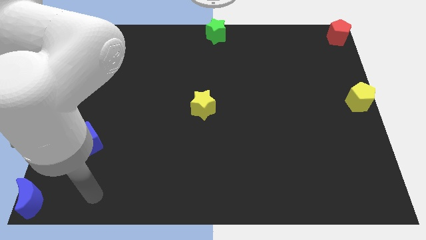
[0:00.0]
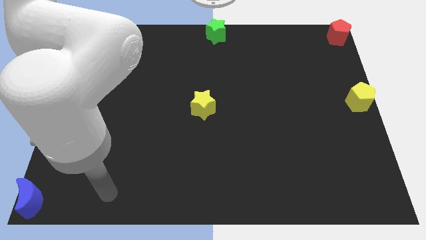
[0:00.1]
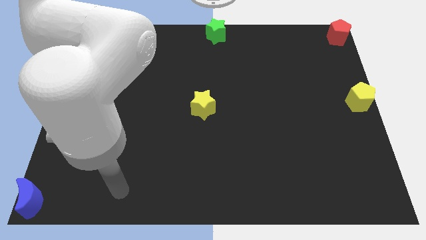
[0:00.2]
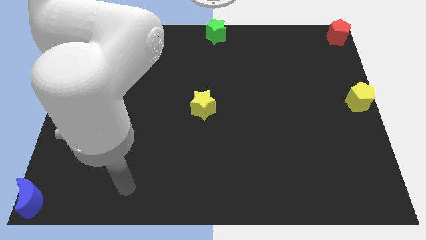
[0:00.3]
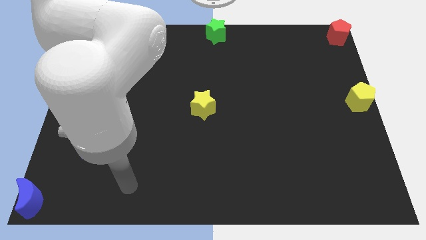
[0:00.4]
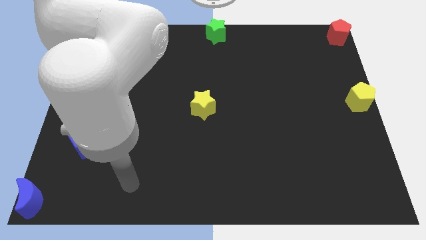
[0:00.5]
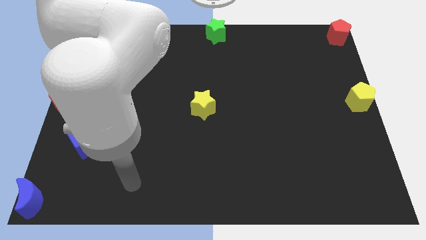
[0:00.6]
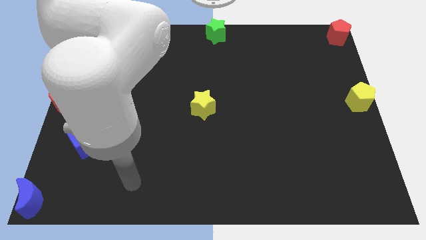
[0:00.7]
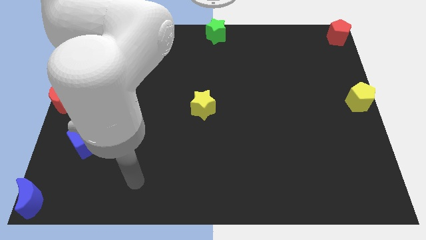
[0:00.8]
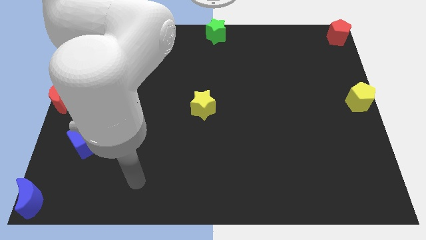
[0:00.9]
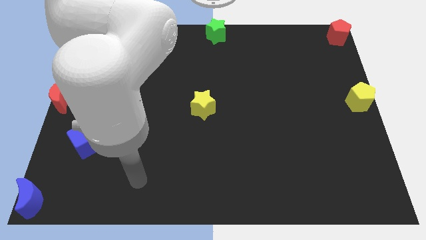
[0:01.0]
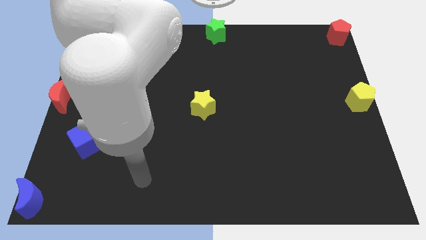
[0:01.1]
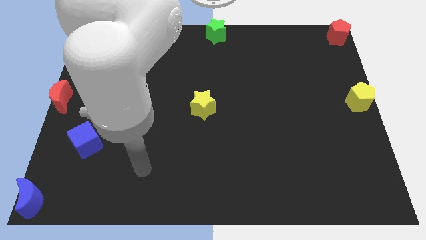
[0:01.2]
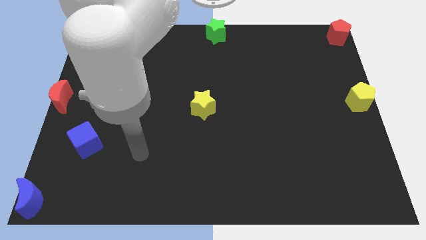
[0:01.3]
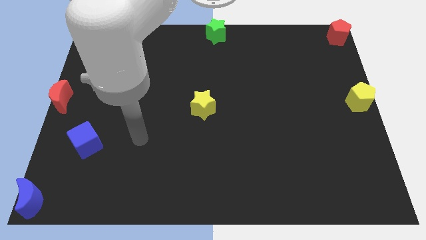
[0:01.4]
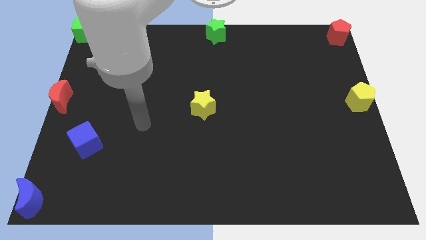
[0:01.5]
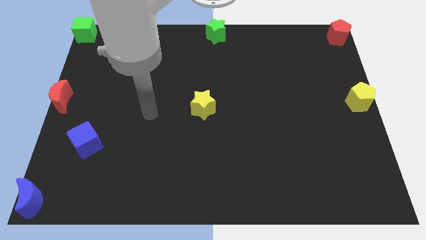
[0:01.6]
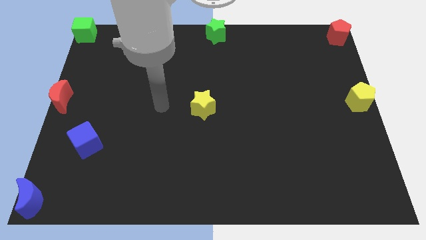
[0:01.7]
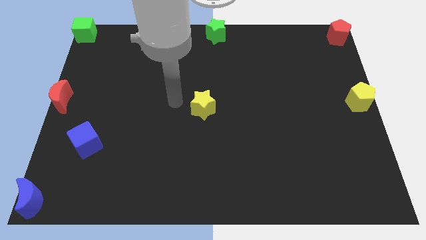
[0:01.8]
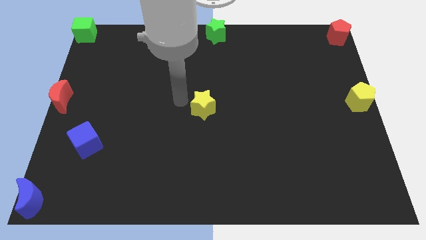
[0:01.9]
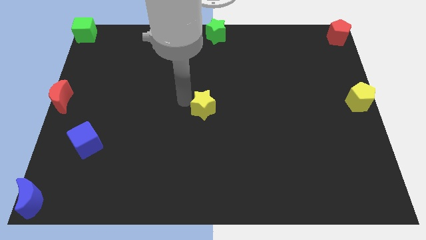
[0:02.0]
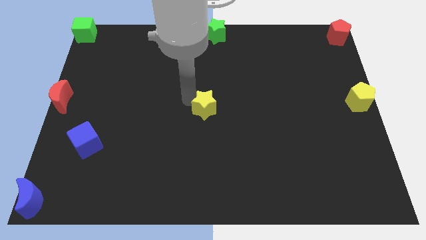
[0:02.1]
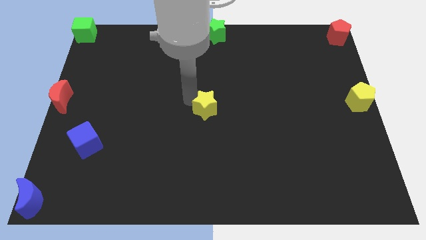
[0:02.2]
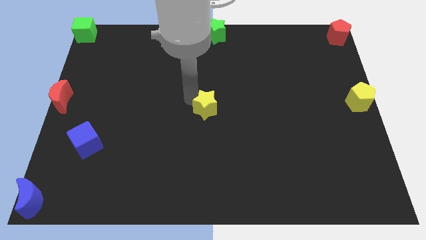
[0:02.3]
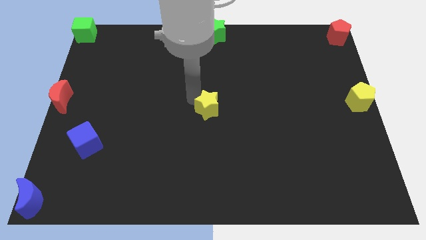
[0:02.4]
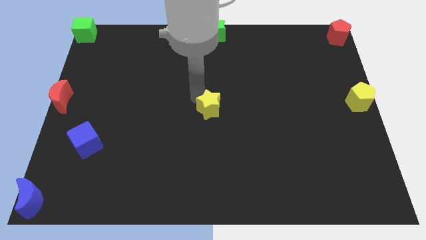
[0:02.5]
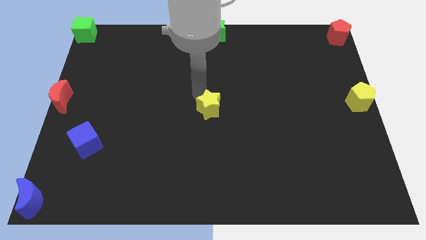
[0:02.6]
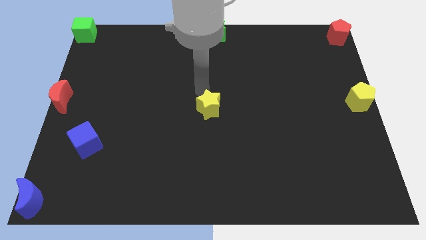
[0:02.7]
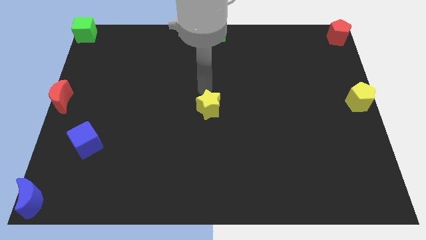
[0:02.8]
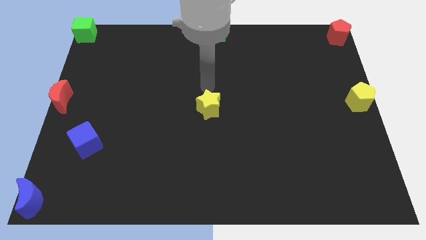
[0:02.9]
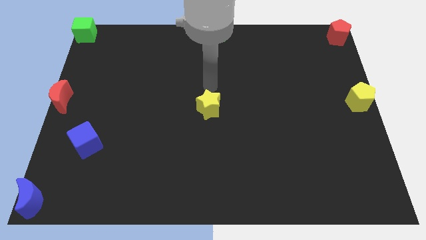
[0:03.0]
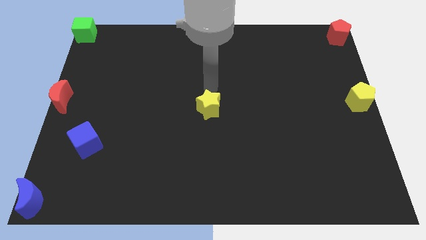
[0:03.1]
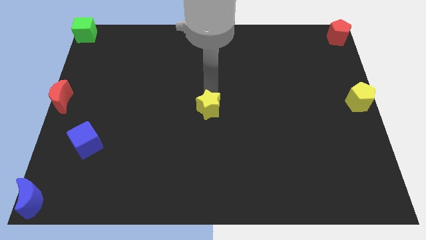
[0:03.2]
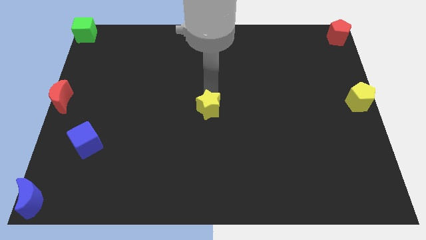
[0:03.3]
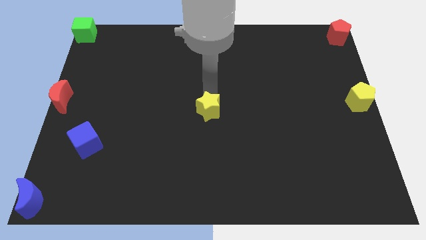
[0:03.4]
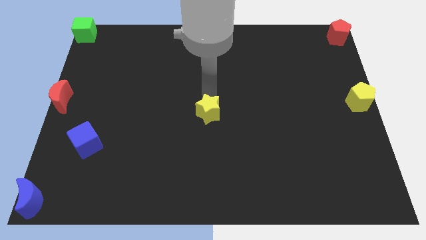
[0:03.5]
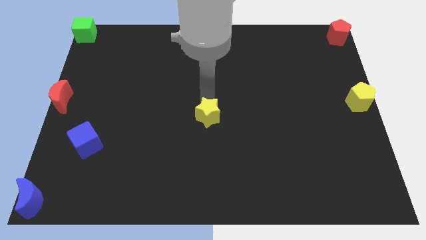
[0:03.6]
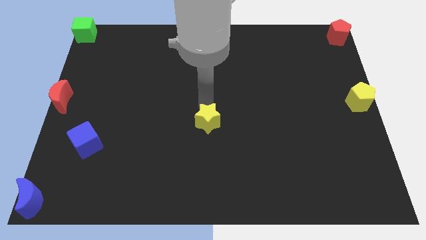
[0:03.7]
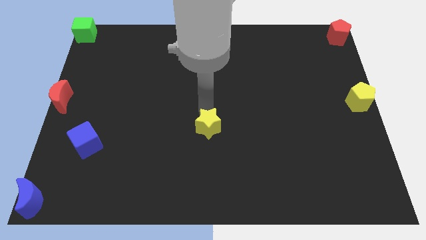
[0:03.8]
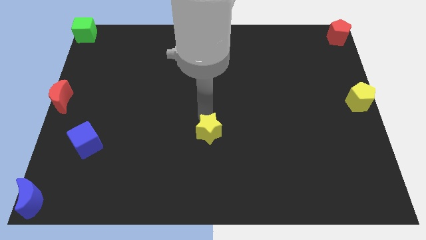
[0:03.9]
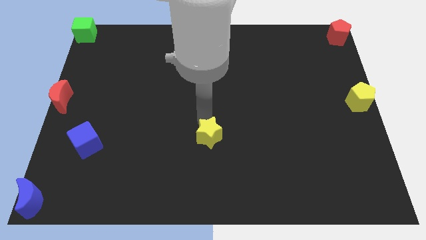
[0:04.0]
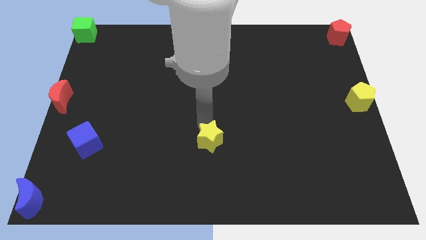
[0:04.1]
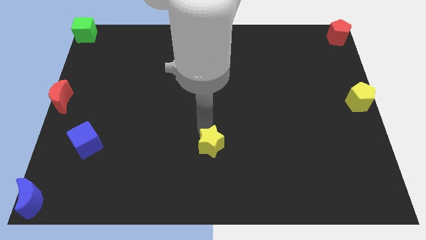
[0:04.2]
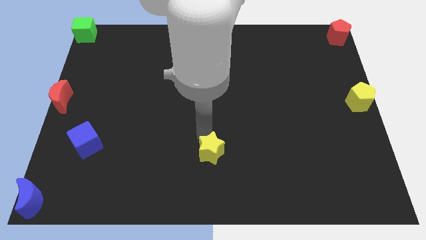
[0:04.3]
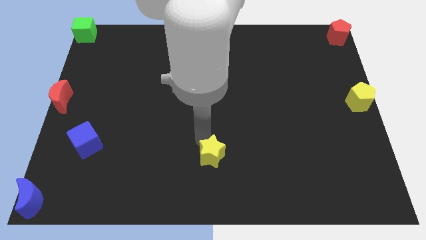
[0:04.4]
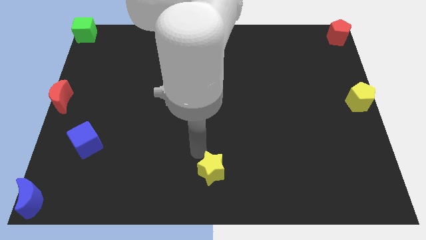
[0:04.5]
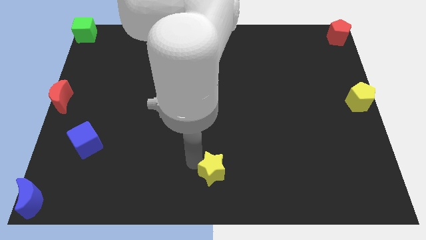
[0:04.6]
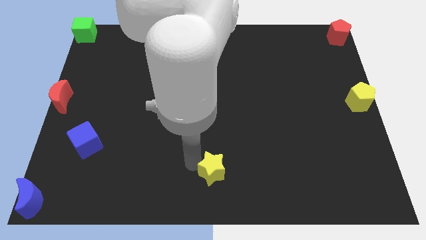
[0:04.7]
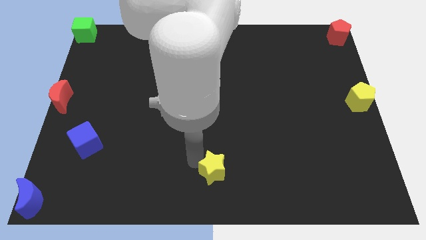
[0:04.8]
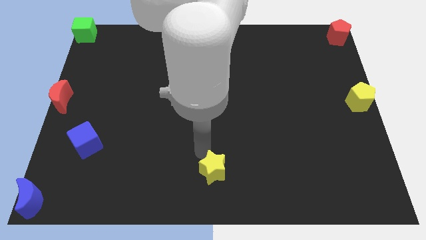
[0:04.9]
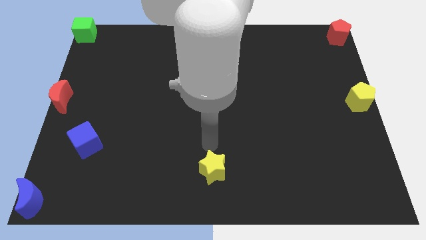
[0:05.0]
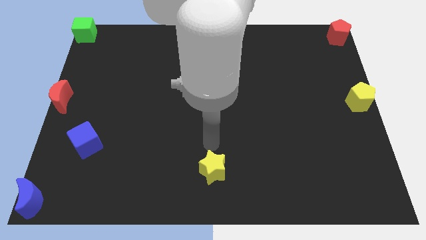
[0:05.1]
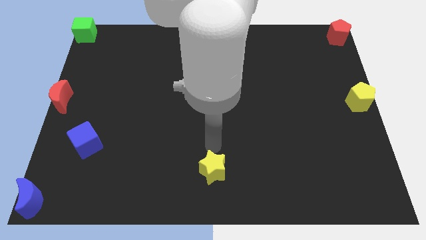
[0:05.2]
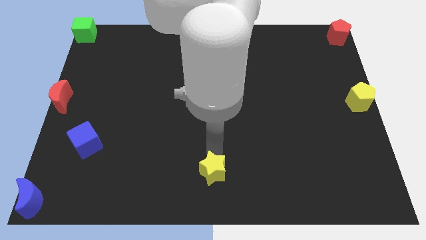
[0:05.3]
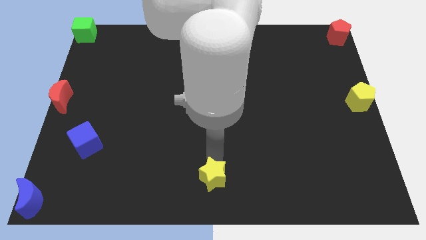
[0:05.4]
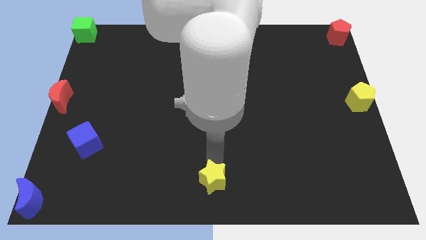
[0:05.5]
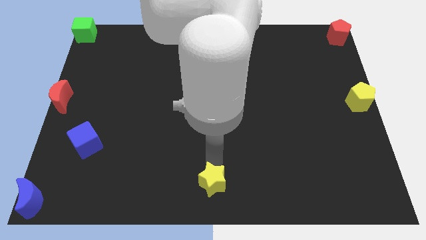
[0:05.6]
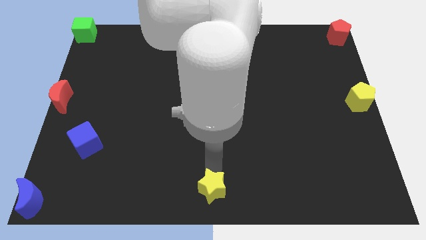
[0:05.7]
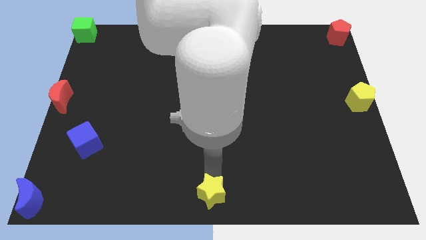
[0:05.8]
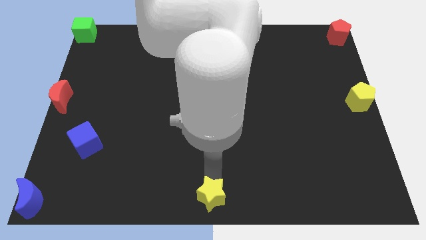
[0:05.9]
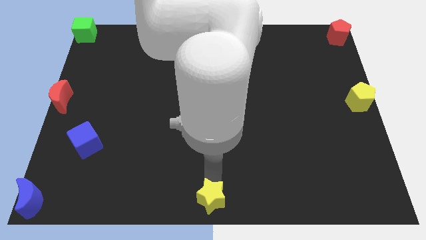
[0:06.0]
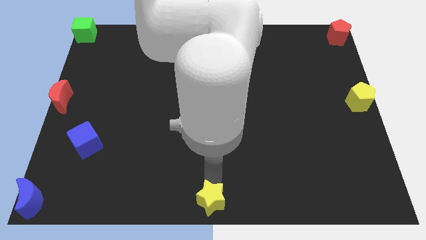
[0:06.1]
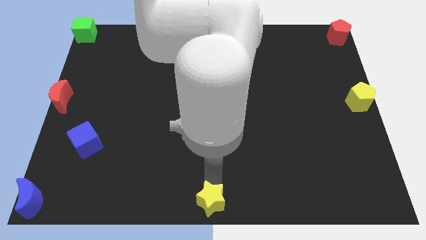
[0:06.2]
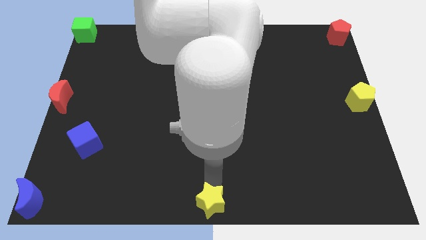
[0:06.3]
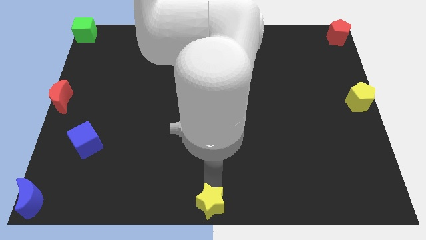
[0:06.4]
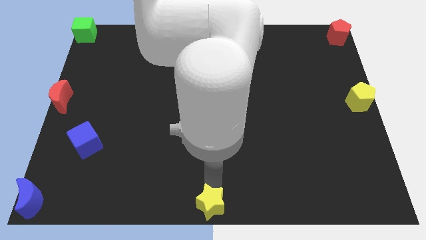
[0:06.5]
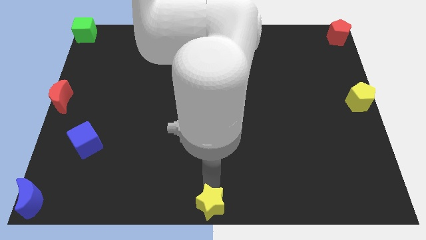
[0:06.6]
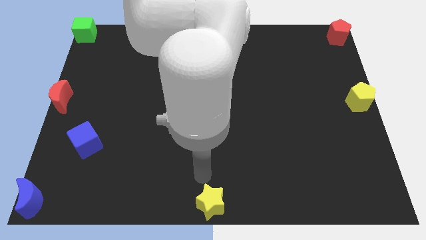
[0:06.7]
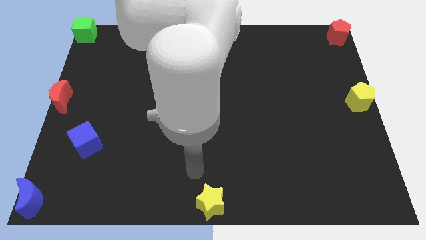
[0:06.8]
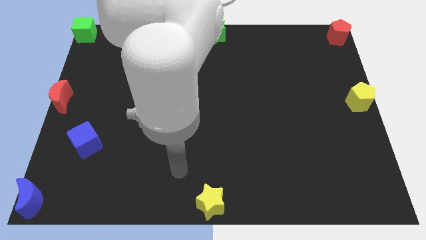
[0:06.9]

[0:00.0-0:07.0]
move yellow star to the bottom of the board to the middle

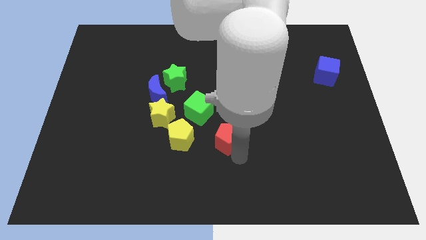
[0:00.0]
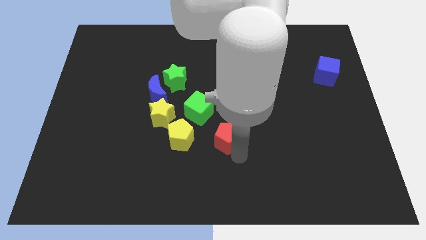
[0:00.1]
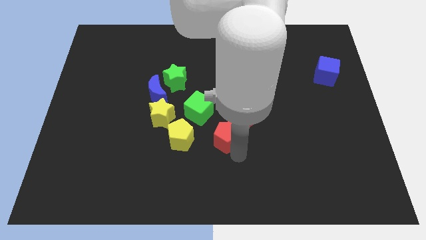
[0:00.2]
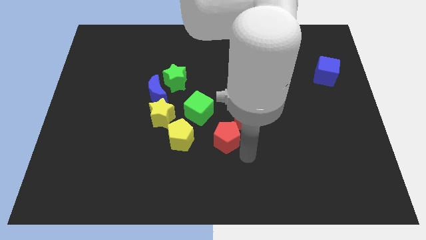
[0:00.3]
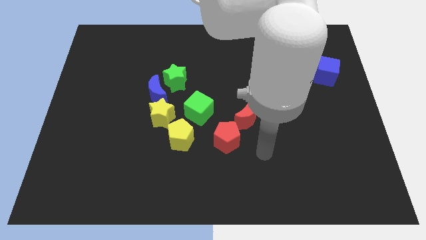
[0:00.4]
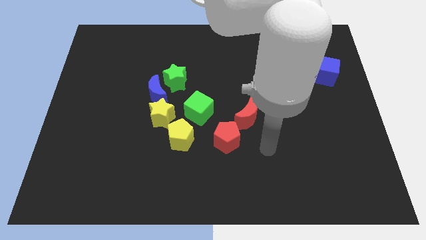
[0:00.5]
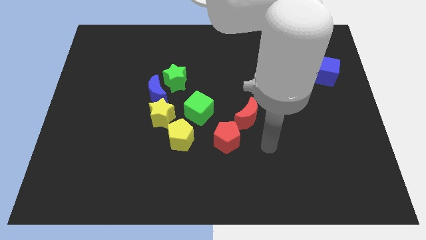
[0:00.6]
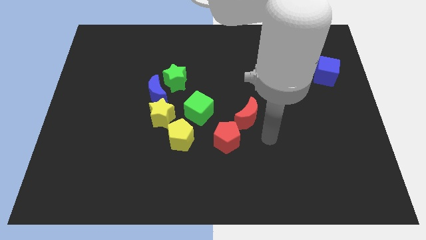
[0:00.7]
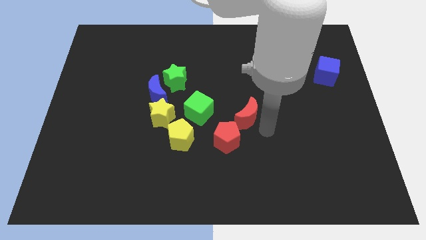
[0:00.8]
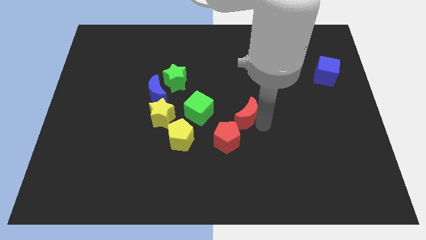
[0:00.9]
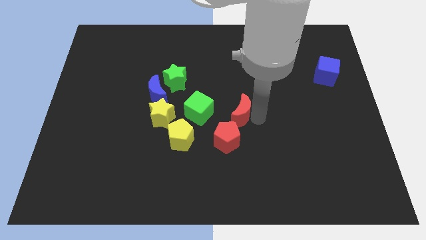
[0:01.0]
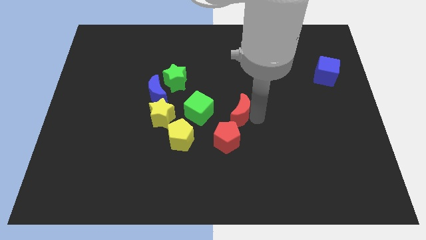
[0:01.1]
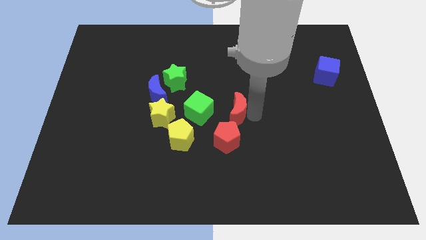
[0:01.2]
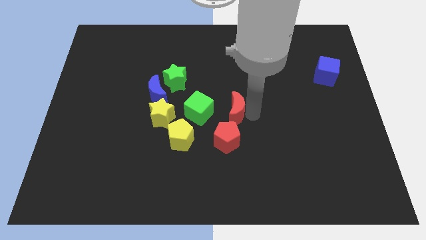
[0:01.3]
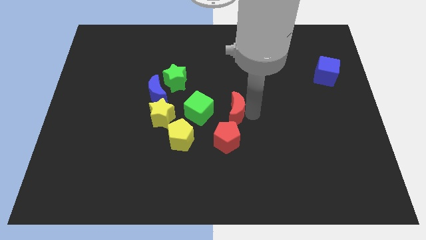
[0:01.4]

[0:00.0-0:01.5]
slightly push the red crescent towards the green cube

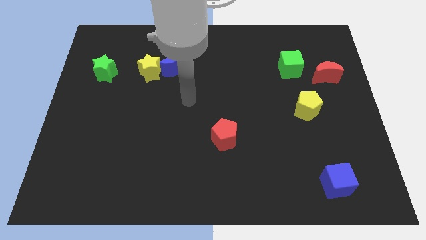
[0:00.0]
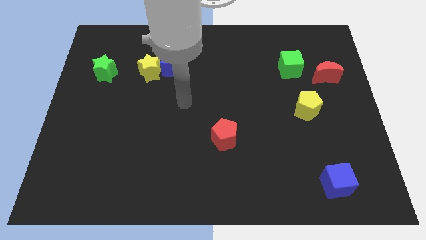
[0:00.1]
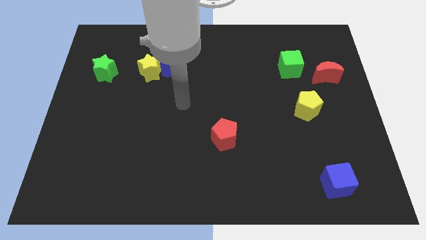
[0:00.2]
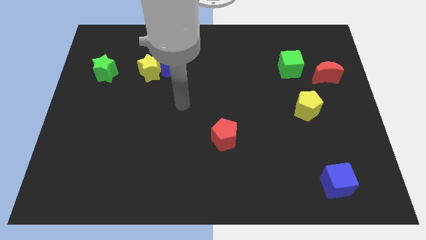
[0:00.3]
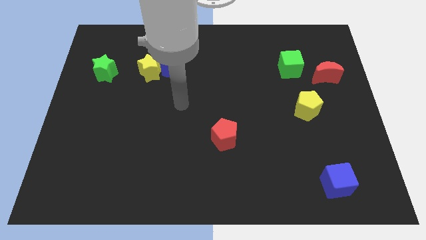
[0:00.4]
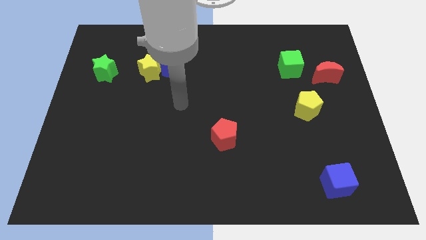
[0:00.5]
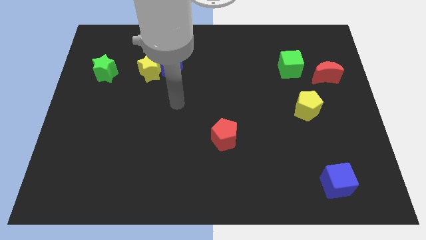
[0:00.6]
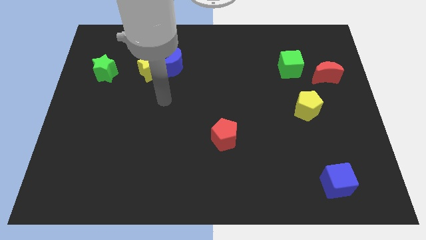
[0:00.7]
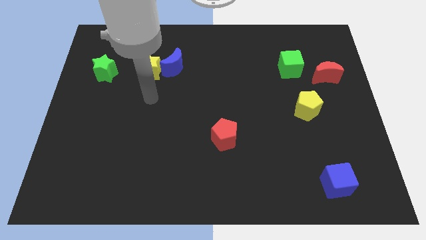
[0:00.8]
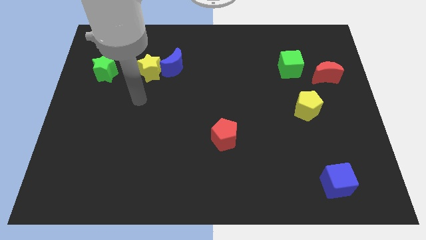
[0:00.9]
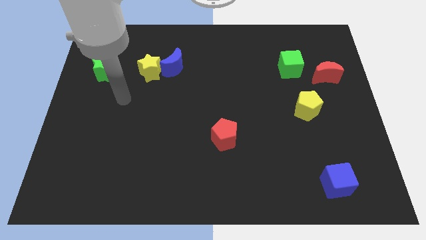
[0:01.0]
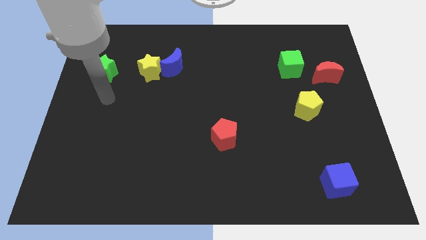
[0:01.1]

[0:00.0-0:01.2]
move your arm towards the bottom of green star
